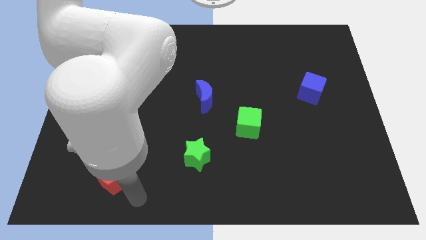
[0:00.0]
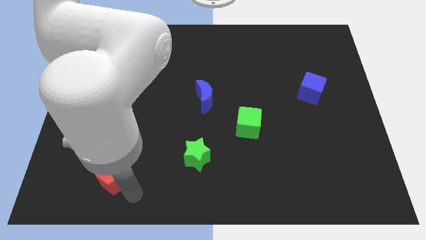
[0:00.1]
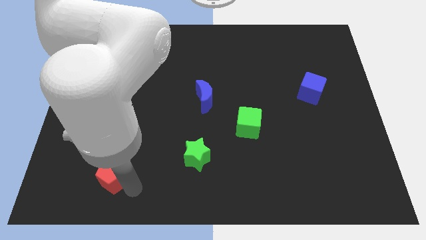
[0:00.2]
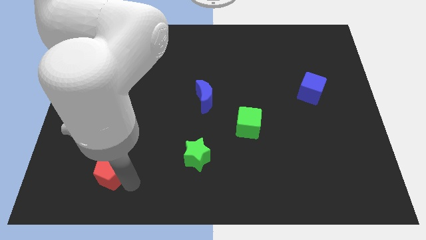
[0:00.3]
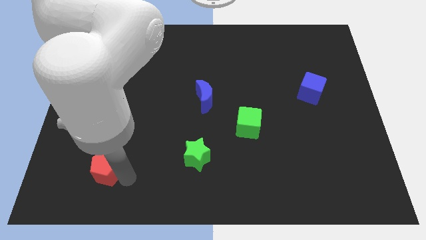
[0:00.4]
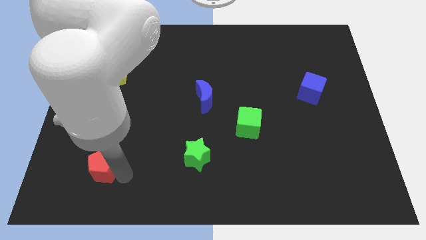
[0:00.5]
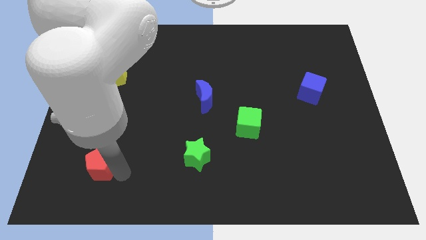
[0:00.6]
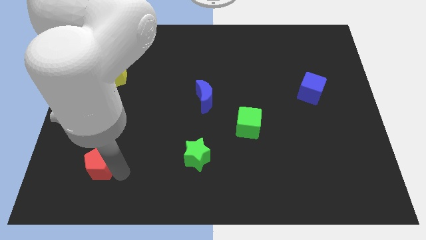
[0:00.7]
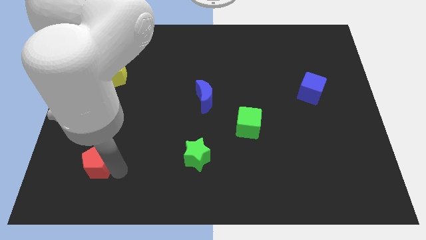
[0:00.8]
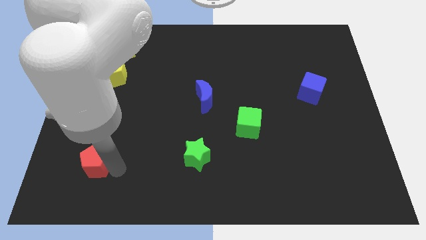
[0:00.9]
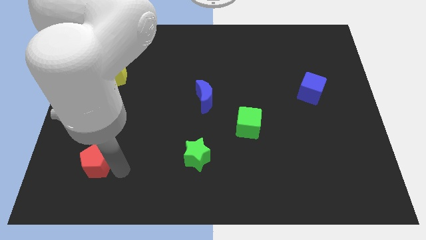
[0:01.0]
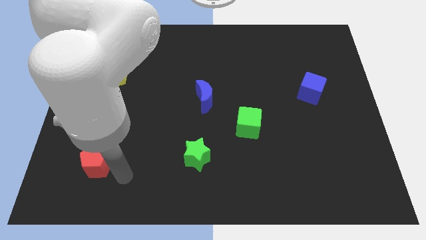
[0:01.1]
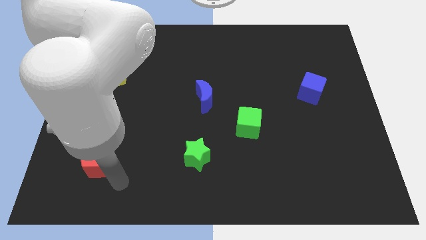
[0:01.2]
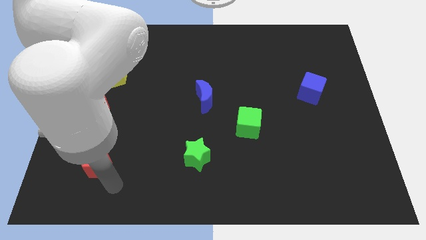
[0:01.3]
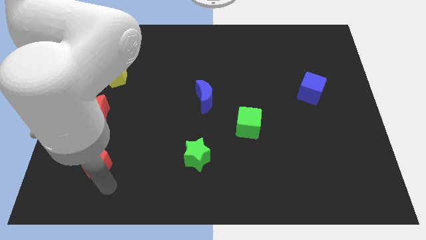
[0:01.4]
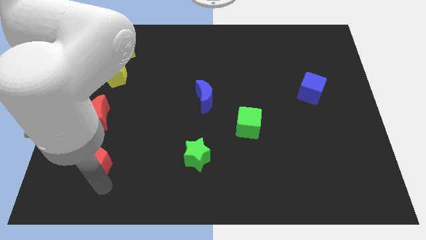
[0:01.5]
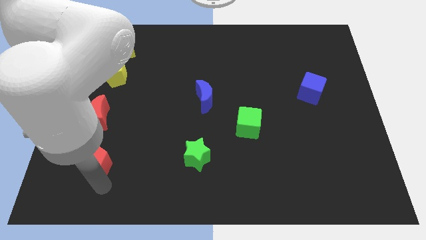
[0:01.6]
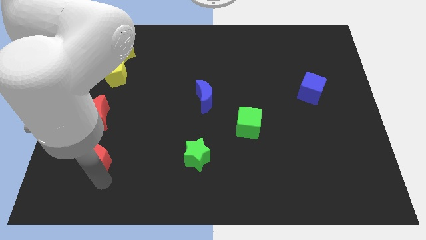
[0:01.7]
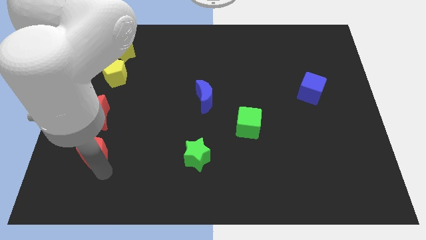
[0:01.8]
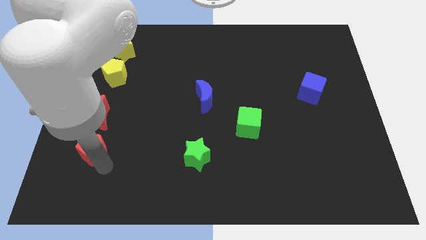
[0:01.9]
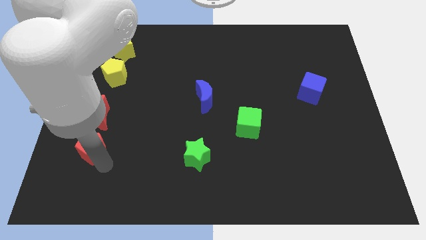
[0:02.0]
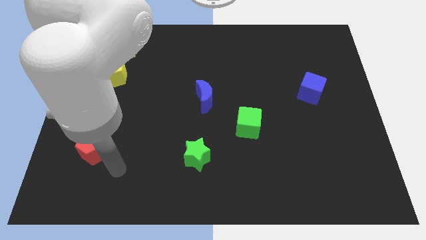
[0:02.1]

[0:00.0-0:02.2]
push the red pentagon to the left of the green star

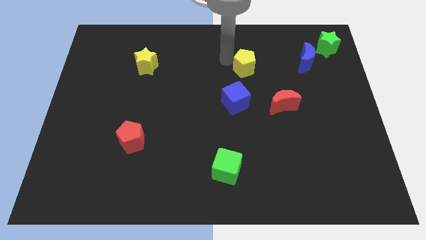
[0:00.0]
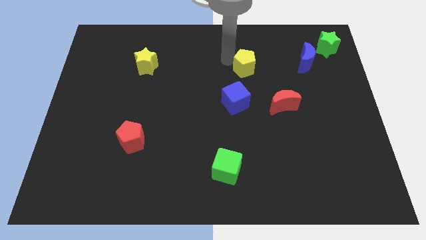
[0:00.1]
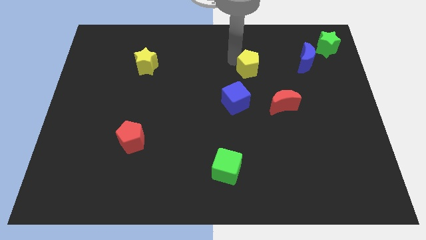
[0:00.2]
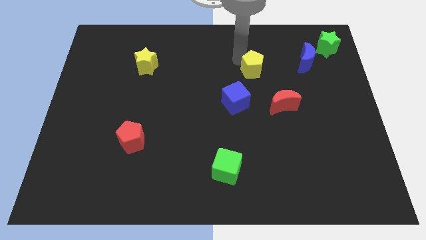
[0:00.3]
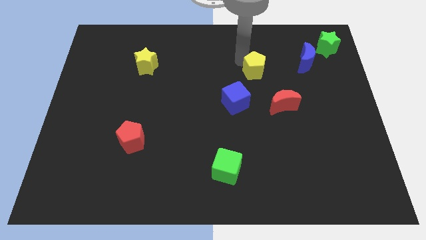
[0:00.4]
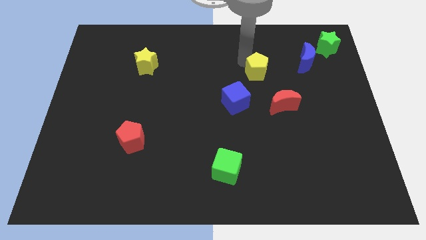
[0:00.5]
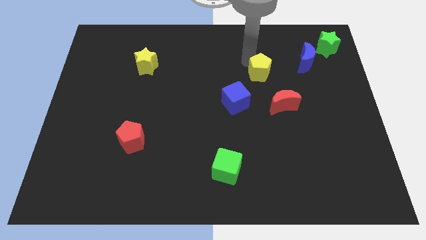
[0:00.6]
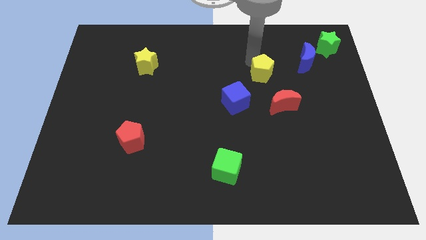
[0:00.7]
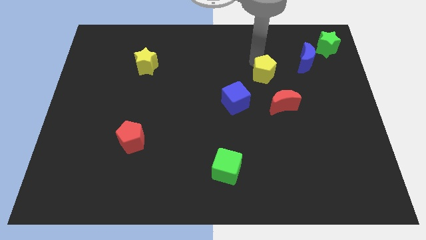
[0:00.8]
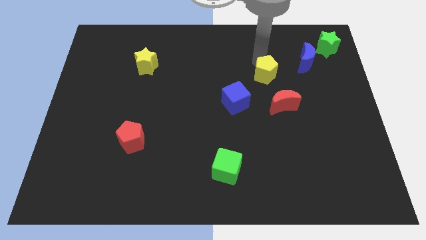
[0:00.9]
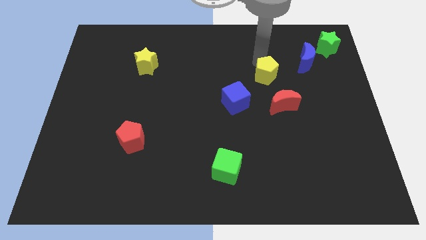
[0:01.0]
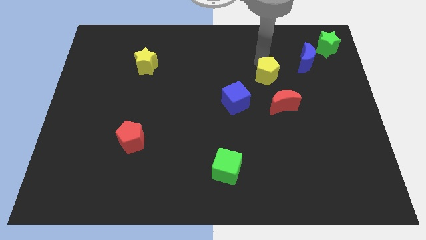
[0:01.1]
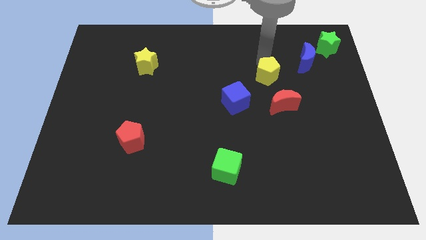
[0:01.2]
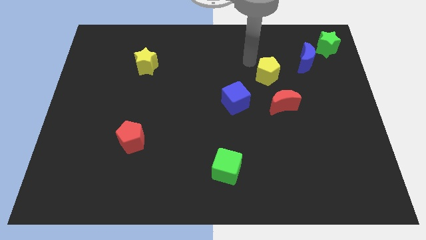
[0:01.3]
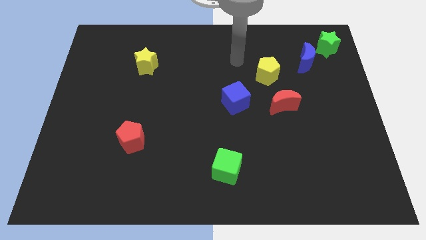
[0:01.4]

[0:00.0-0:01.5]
push the yellow pentagon to the bottom of the board

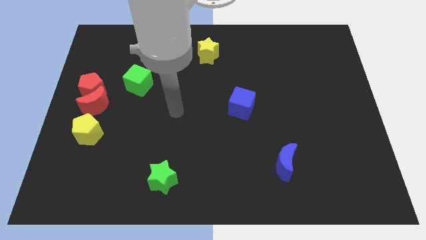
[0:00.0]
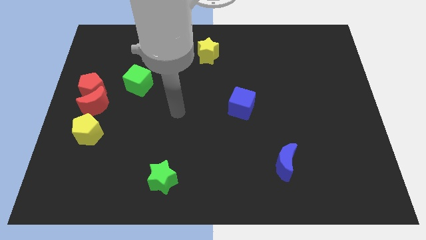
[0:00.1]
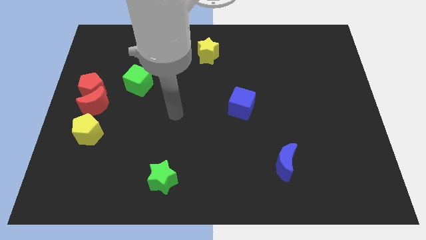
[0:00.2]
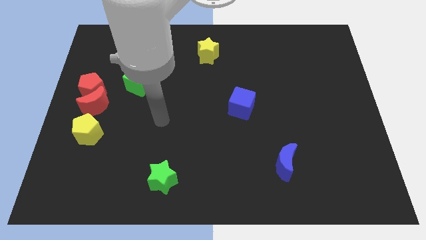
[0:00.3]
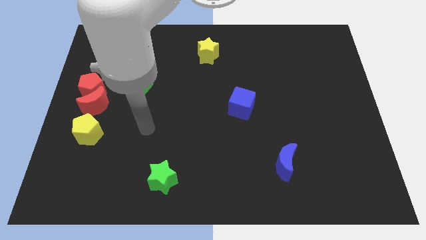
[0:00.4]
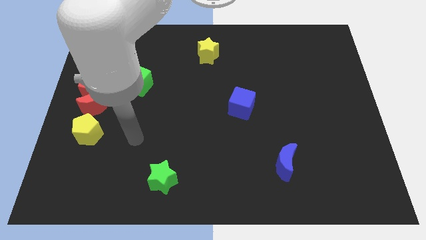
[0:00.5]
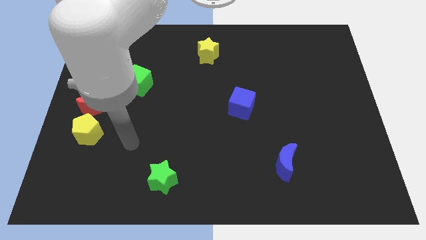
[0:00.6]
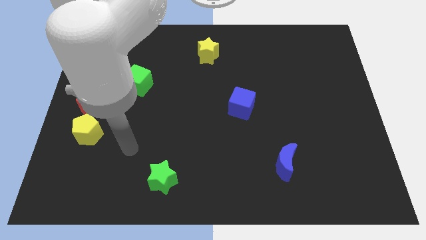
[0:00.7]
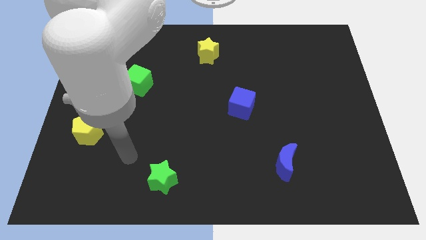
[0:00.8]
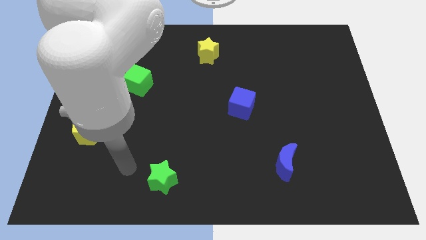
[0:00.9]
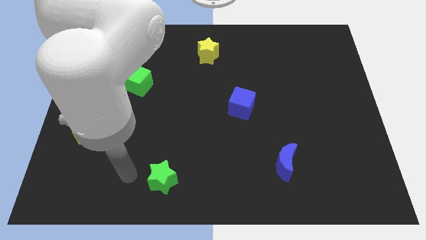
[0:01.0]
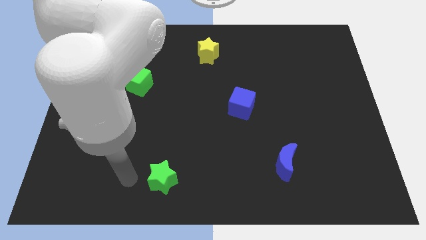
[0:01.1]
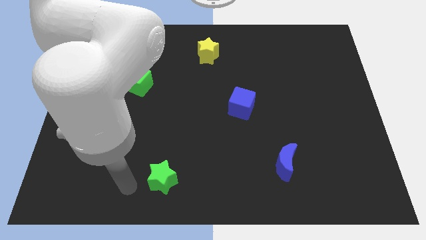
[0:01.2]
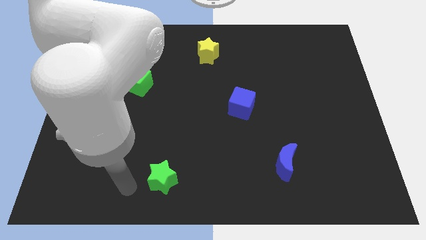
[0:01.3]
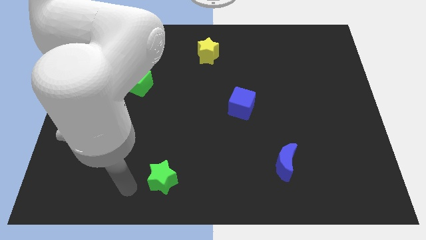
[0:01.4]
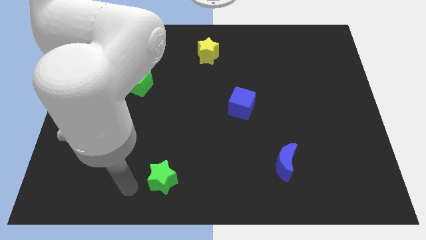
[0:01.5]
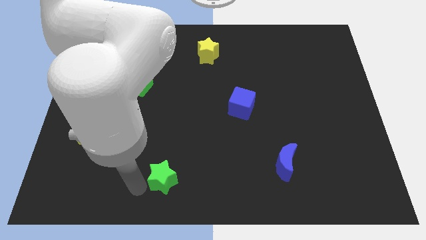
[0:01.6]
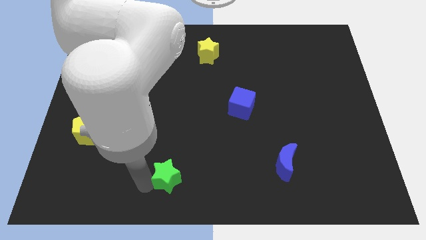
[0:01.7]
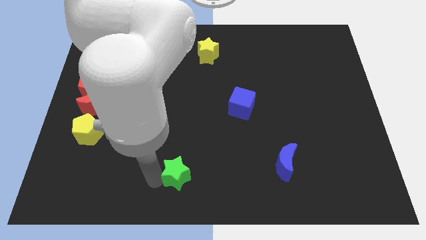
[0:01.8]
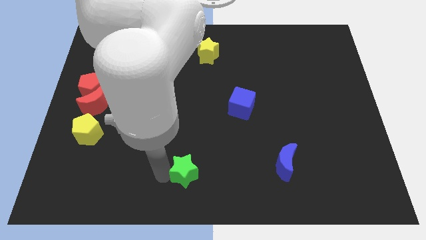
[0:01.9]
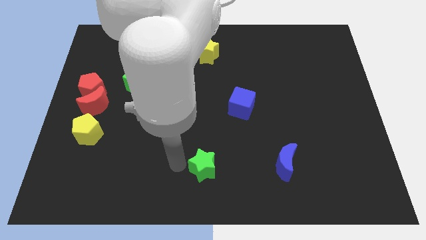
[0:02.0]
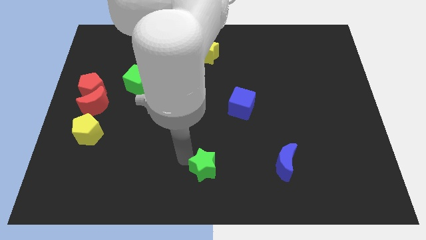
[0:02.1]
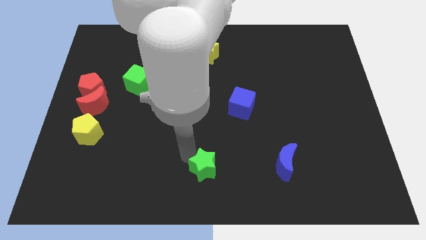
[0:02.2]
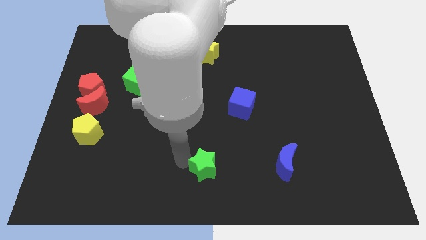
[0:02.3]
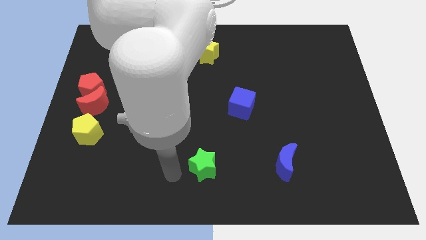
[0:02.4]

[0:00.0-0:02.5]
place the green star parallel to the left of the blue moon

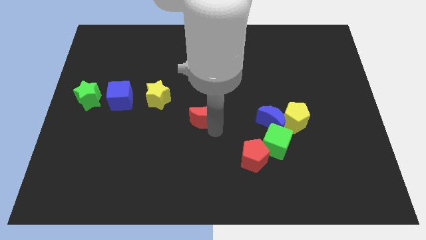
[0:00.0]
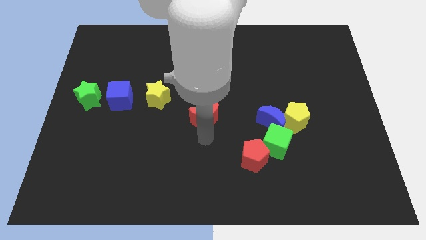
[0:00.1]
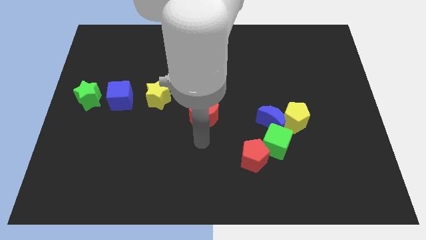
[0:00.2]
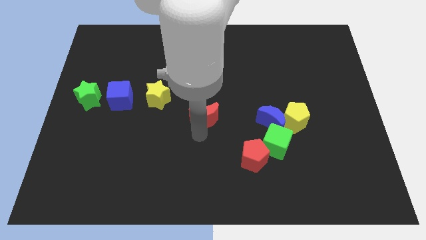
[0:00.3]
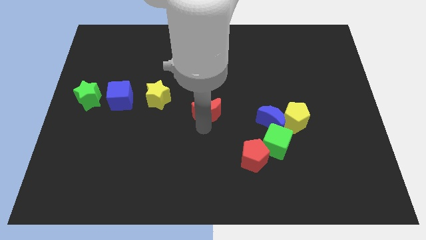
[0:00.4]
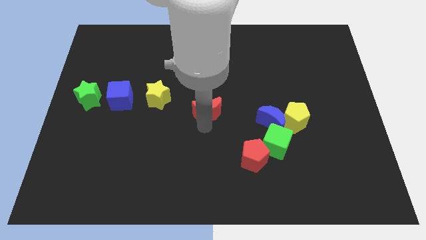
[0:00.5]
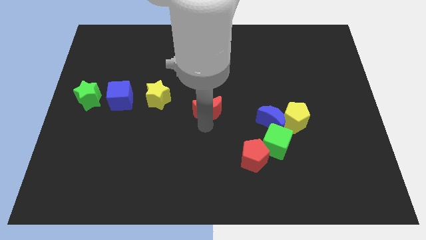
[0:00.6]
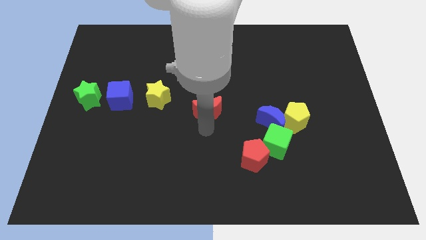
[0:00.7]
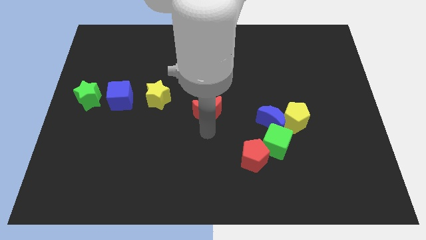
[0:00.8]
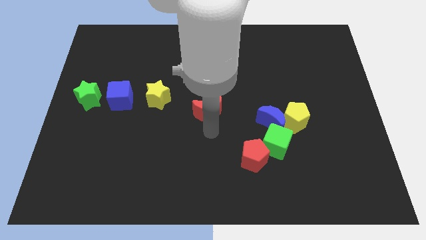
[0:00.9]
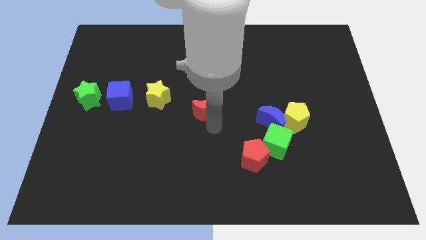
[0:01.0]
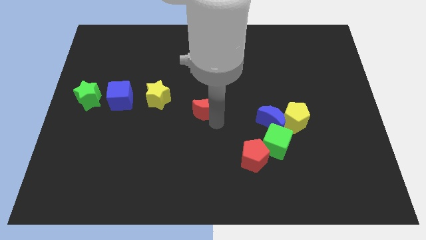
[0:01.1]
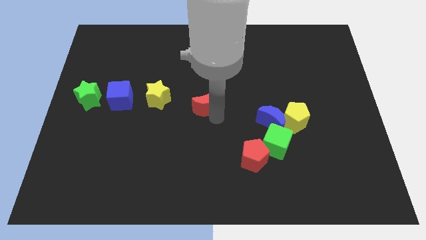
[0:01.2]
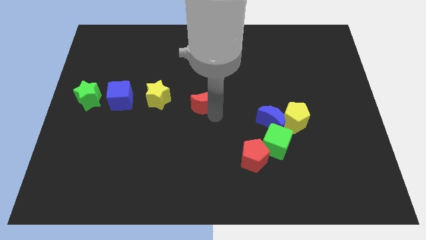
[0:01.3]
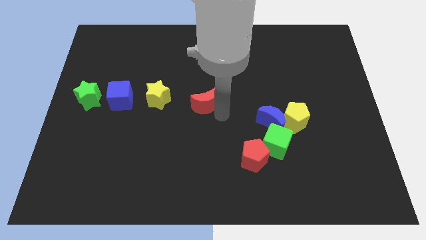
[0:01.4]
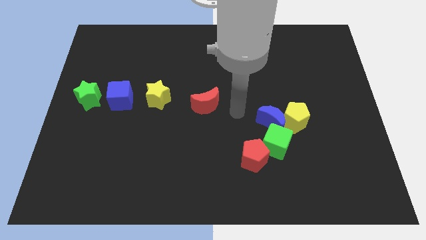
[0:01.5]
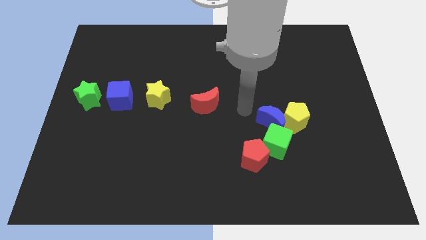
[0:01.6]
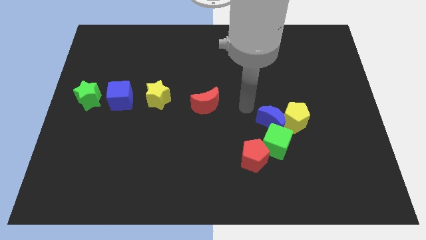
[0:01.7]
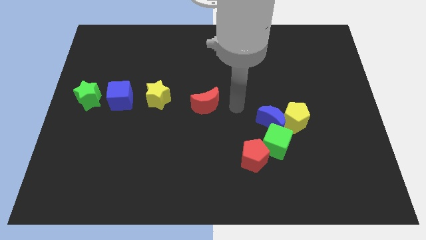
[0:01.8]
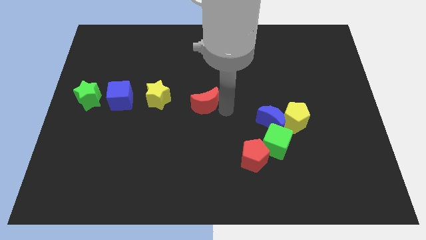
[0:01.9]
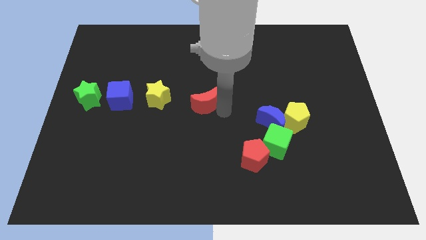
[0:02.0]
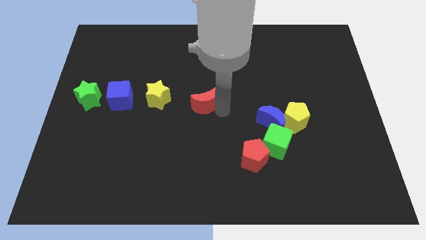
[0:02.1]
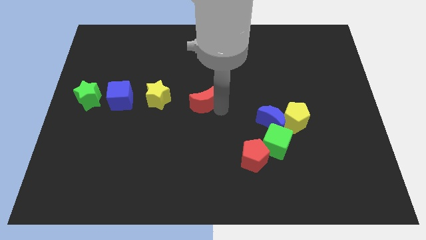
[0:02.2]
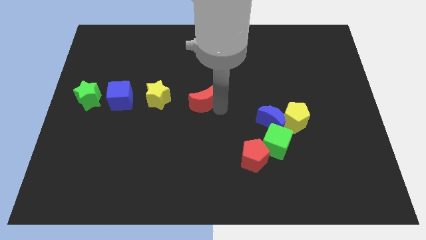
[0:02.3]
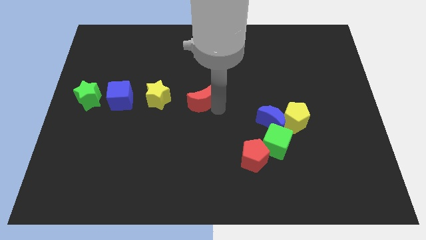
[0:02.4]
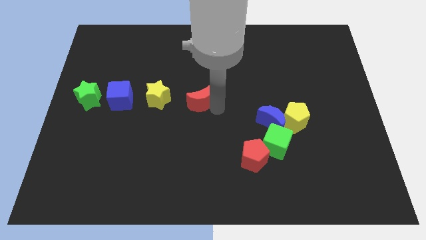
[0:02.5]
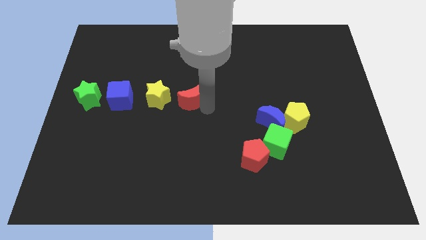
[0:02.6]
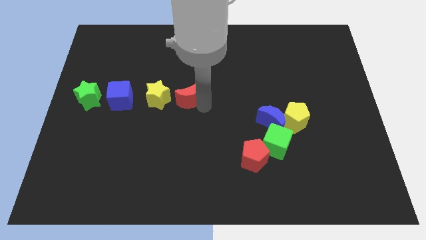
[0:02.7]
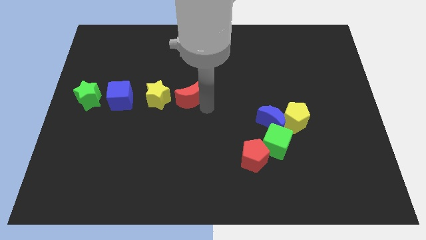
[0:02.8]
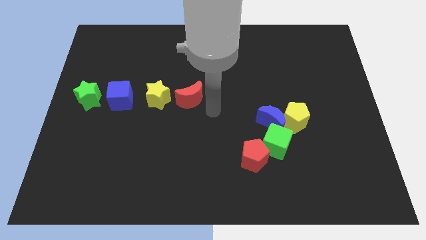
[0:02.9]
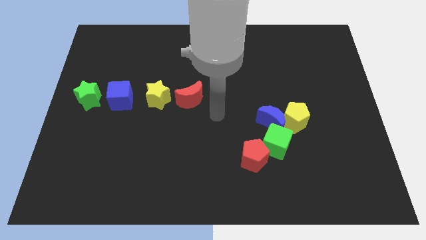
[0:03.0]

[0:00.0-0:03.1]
place the red crescent to the right side of the yellow star
